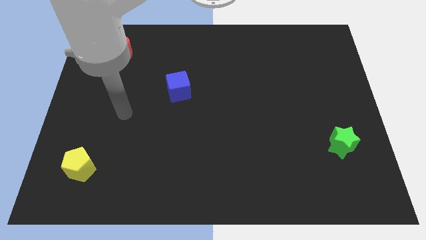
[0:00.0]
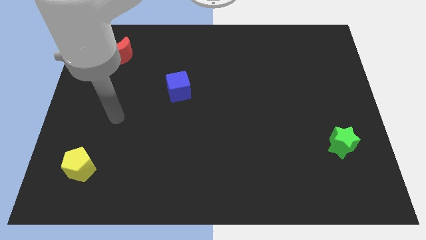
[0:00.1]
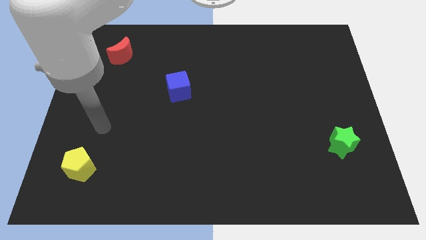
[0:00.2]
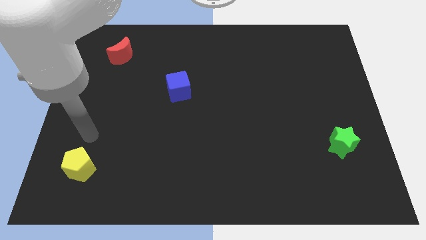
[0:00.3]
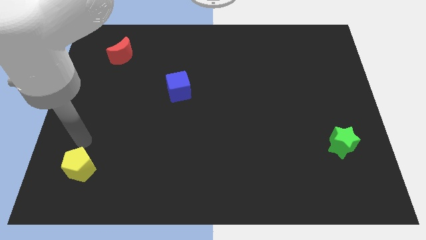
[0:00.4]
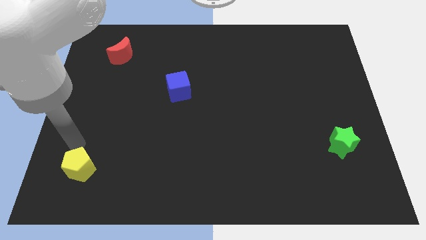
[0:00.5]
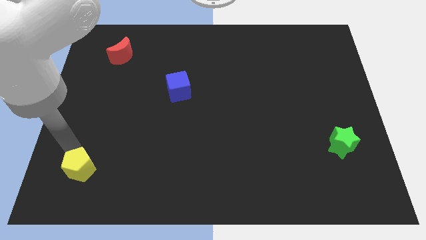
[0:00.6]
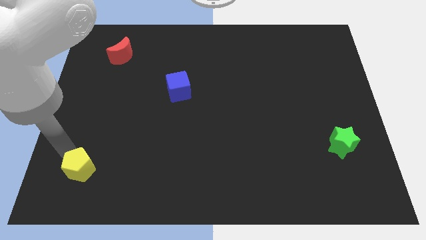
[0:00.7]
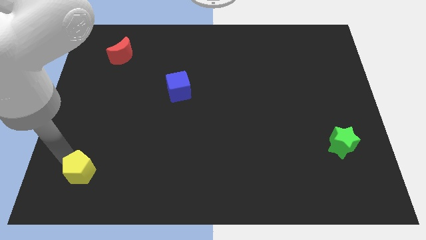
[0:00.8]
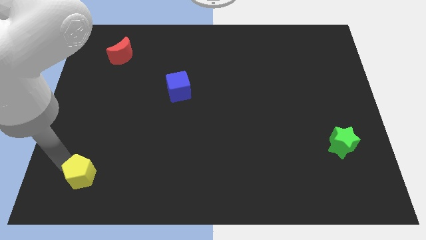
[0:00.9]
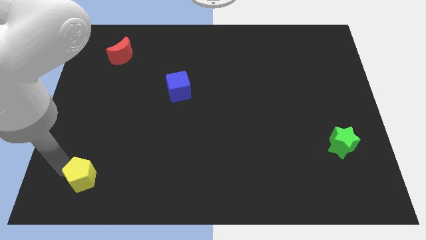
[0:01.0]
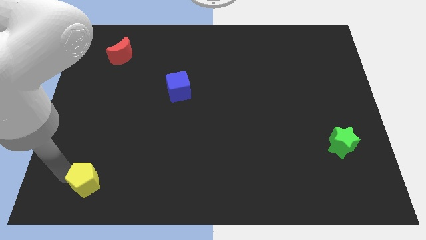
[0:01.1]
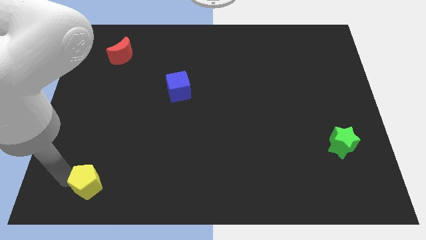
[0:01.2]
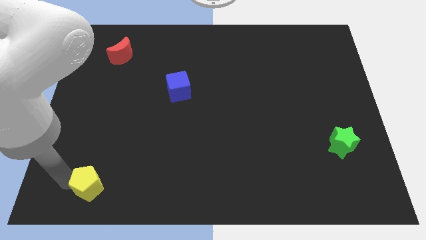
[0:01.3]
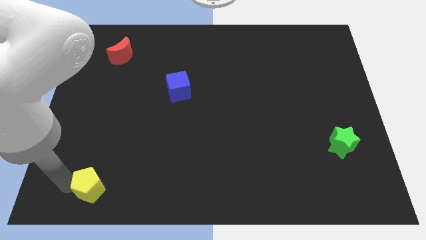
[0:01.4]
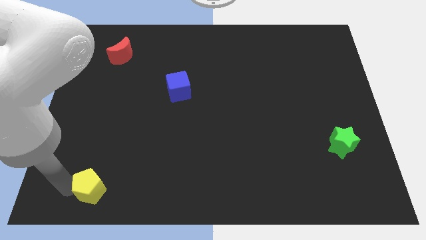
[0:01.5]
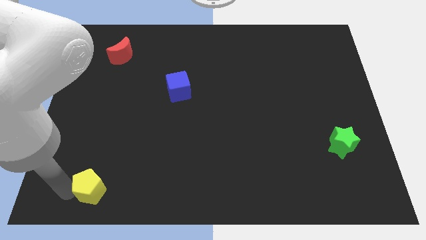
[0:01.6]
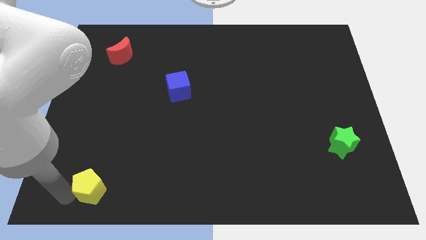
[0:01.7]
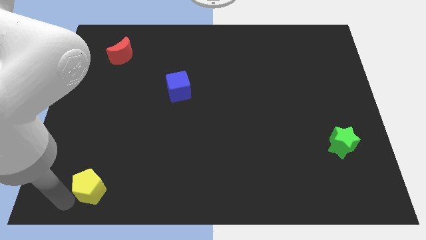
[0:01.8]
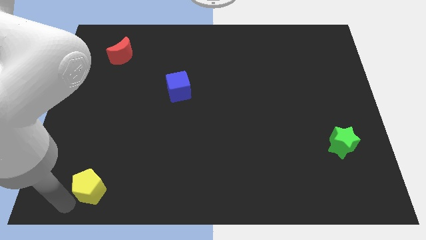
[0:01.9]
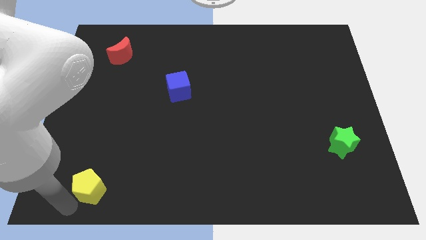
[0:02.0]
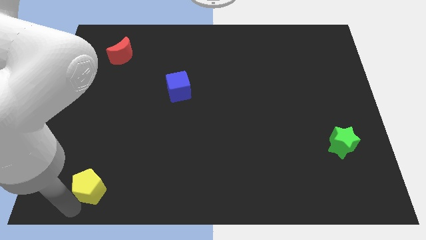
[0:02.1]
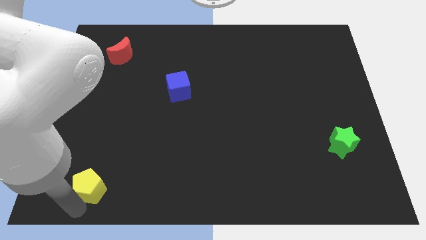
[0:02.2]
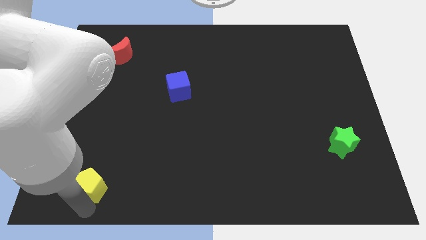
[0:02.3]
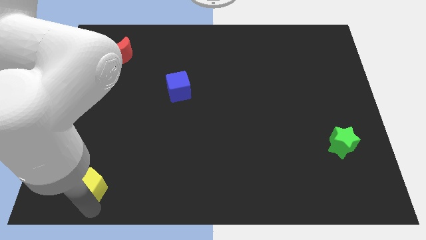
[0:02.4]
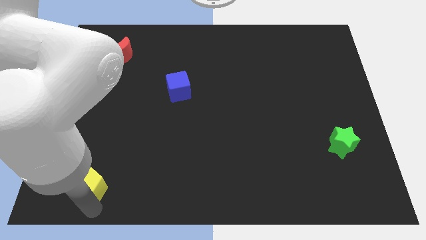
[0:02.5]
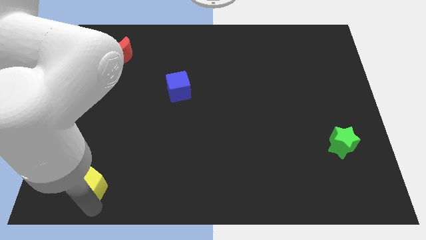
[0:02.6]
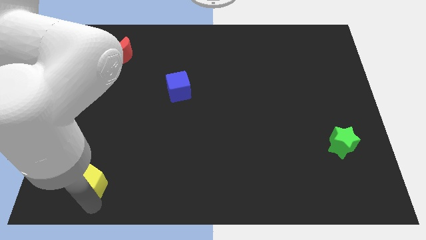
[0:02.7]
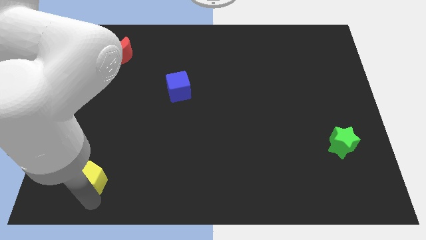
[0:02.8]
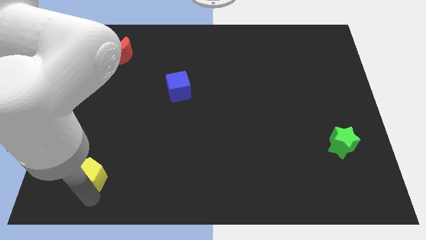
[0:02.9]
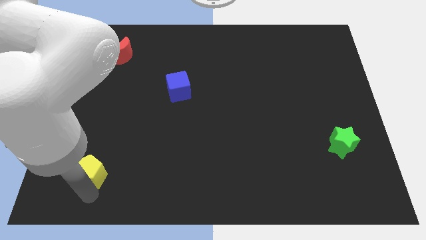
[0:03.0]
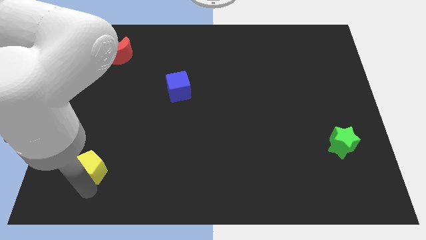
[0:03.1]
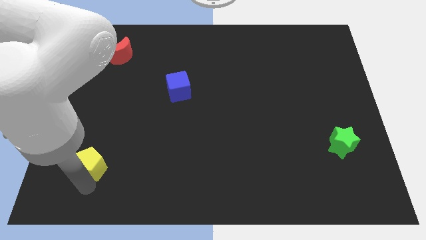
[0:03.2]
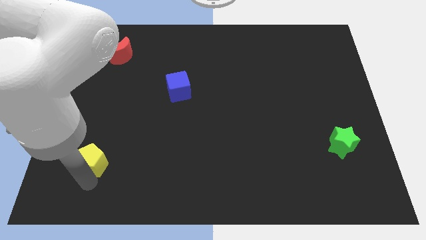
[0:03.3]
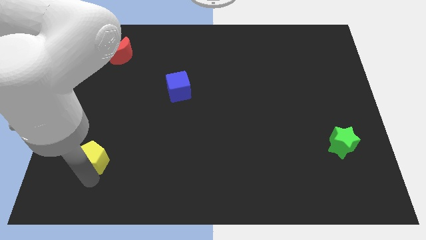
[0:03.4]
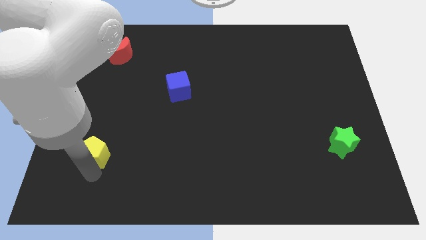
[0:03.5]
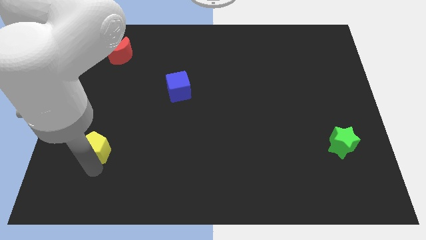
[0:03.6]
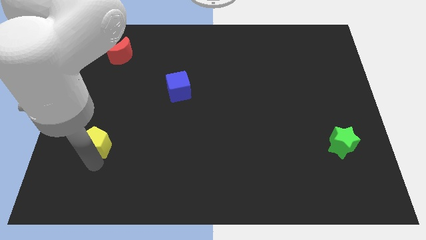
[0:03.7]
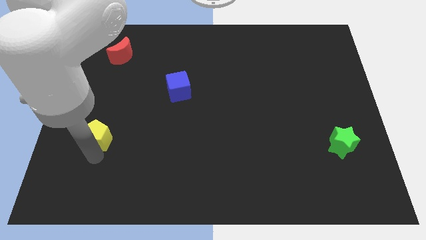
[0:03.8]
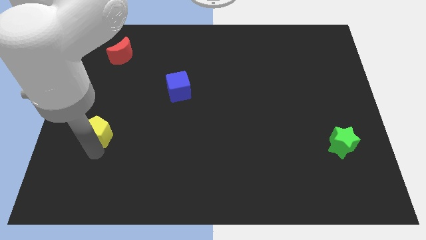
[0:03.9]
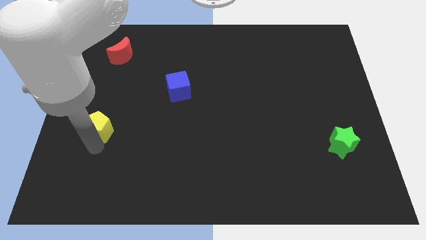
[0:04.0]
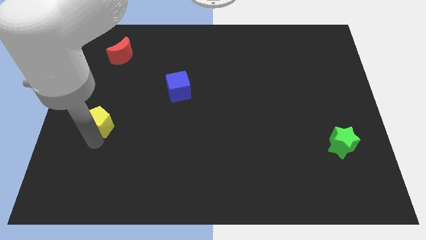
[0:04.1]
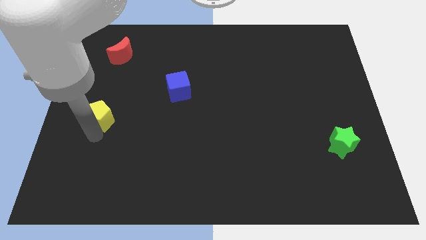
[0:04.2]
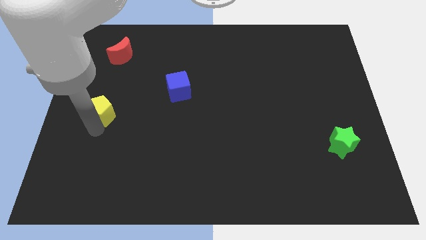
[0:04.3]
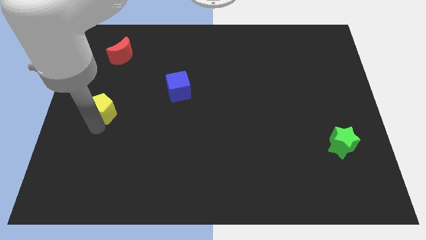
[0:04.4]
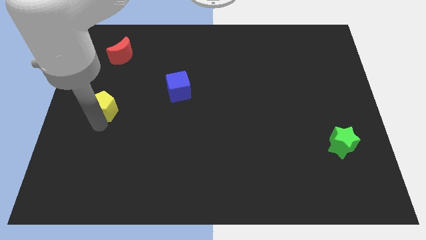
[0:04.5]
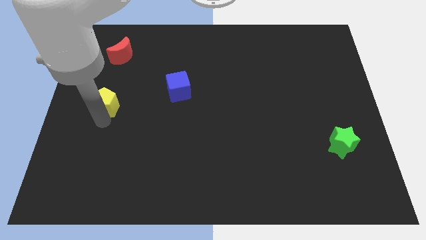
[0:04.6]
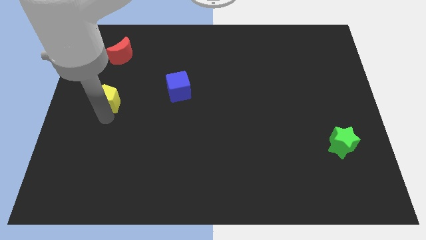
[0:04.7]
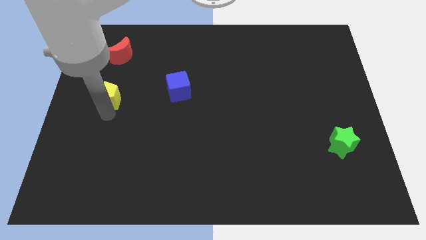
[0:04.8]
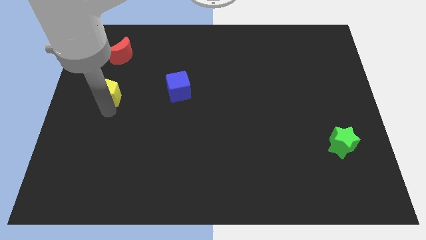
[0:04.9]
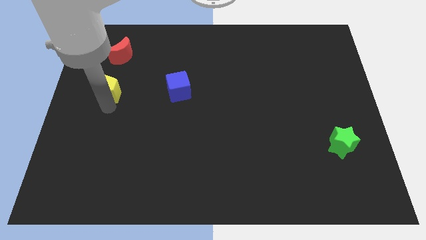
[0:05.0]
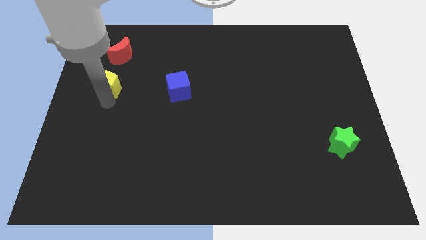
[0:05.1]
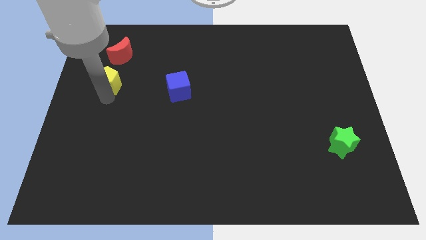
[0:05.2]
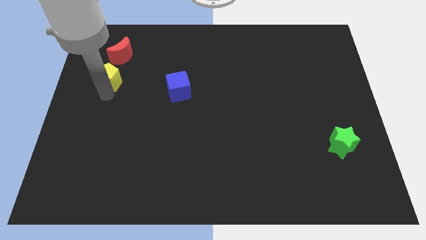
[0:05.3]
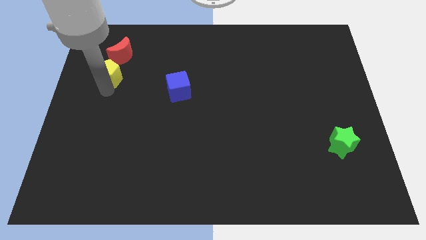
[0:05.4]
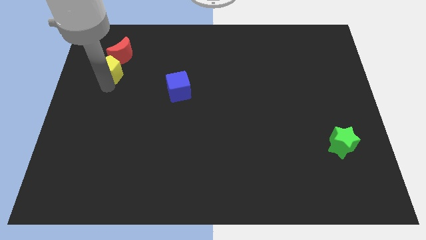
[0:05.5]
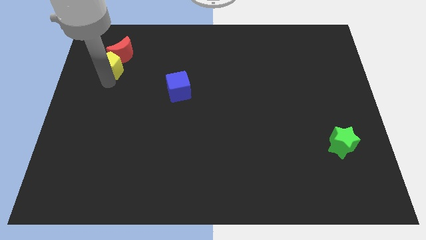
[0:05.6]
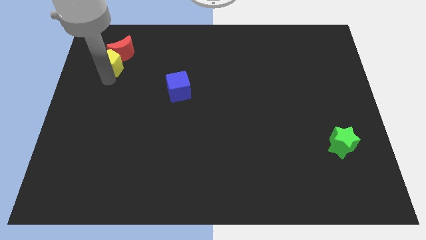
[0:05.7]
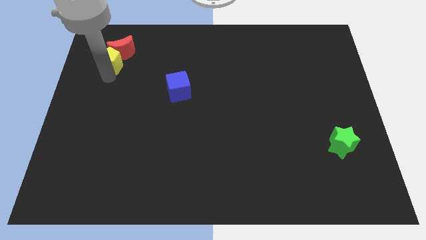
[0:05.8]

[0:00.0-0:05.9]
slide the pentagon next to the red moon

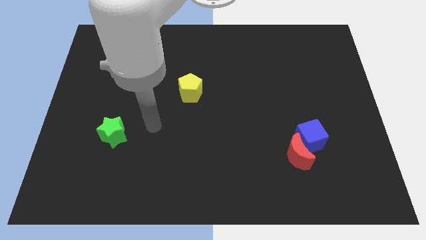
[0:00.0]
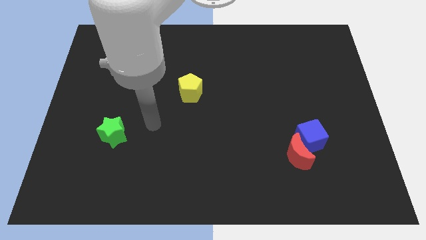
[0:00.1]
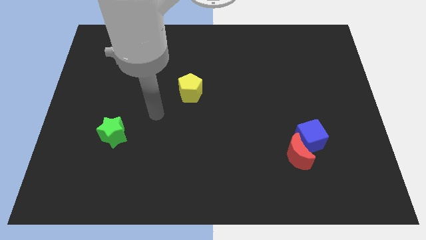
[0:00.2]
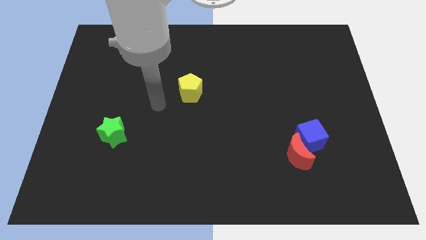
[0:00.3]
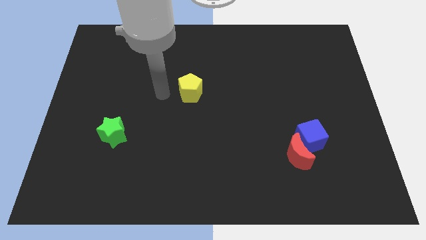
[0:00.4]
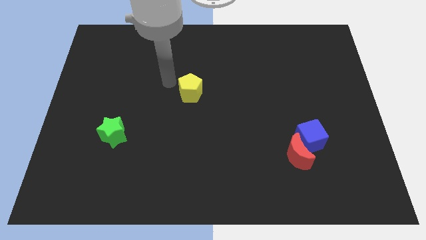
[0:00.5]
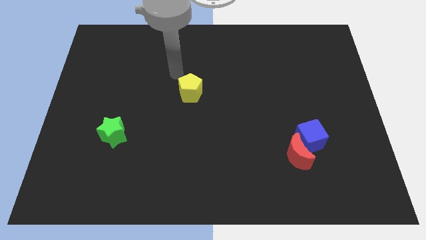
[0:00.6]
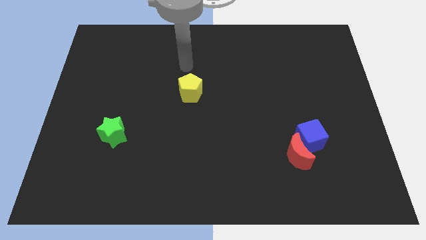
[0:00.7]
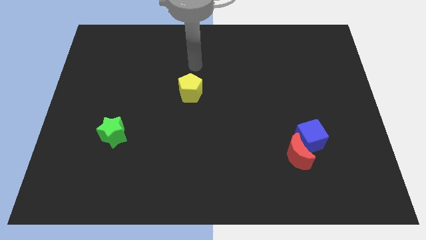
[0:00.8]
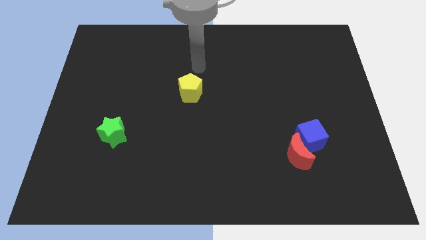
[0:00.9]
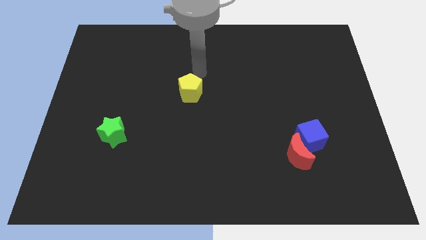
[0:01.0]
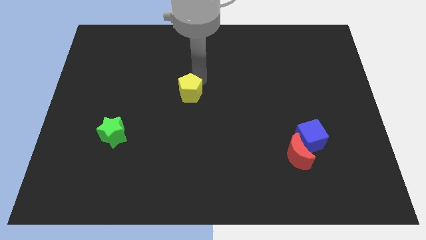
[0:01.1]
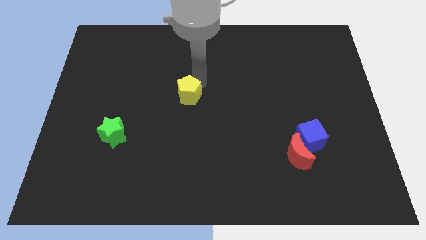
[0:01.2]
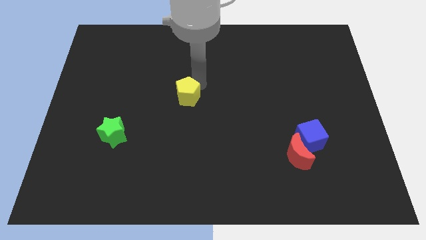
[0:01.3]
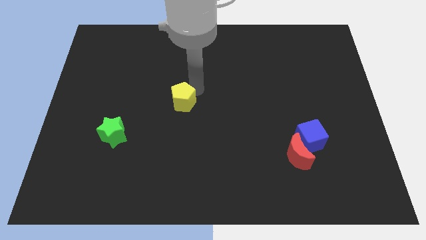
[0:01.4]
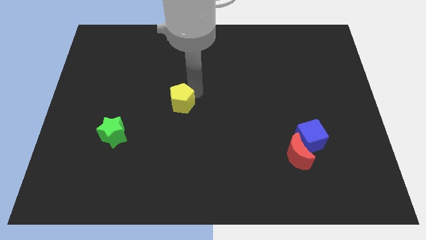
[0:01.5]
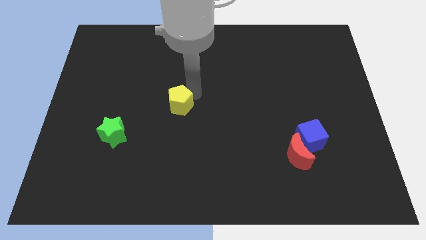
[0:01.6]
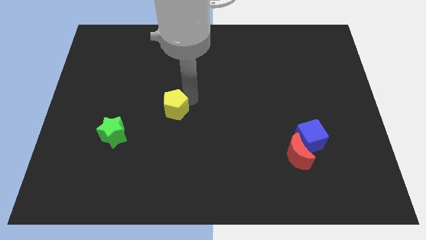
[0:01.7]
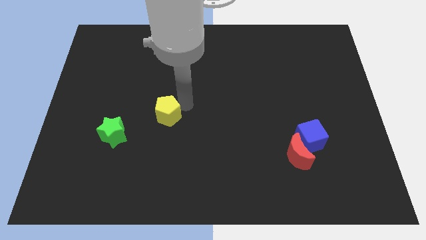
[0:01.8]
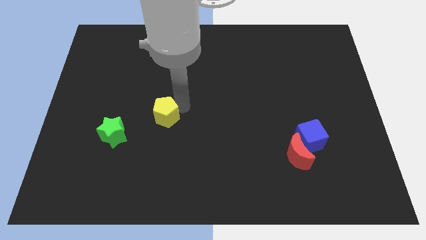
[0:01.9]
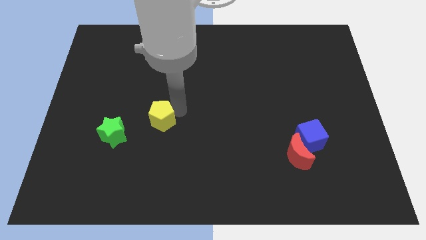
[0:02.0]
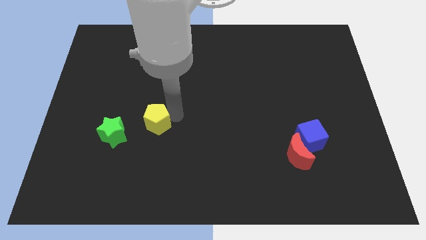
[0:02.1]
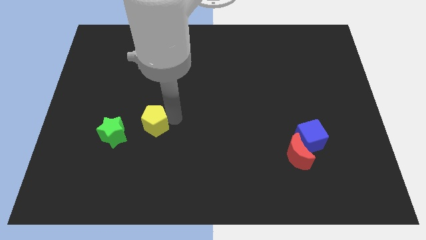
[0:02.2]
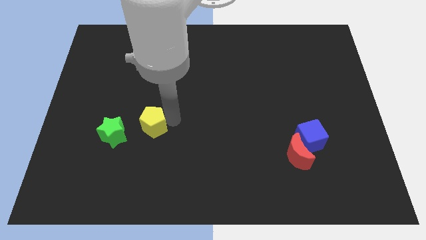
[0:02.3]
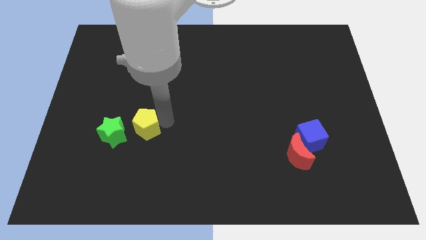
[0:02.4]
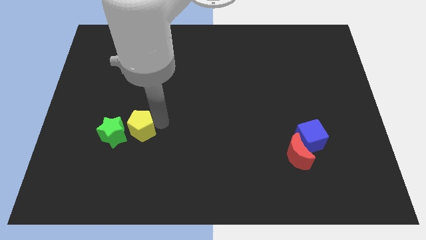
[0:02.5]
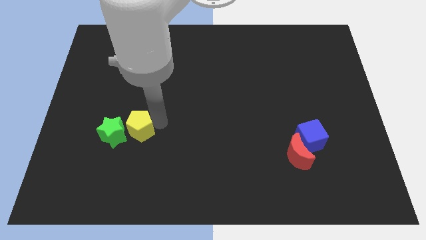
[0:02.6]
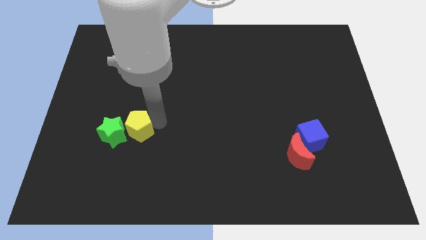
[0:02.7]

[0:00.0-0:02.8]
slide the green block close to the yellow block
